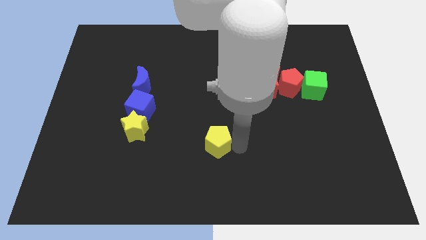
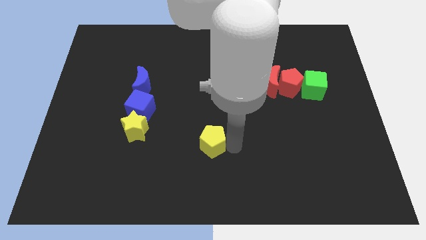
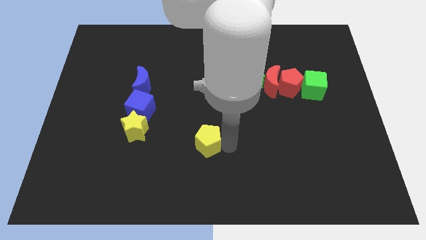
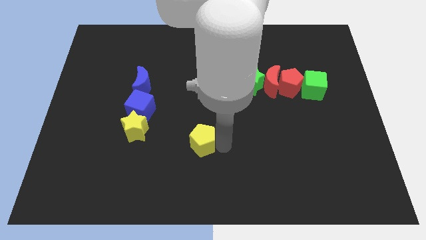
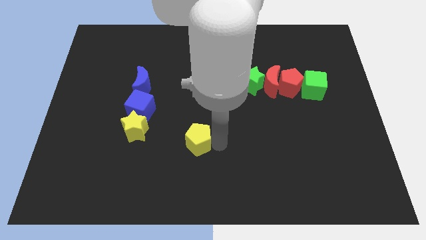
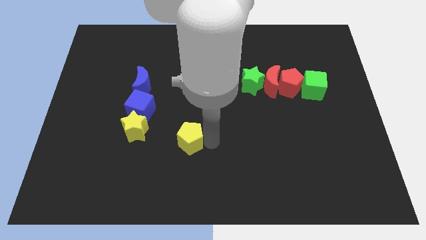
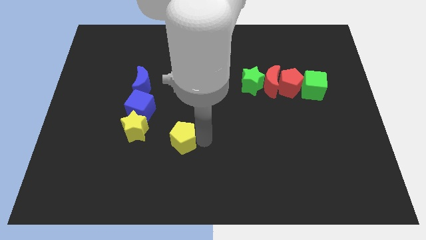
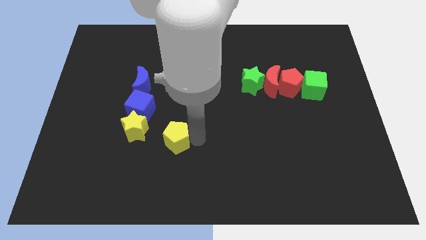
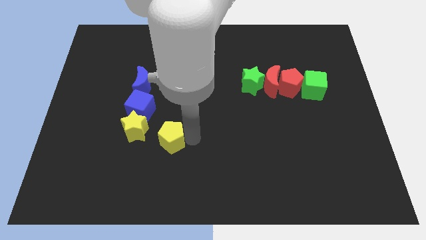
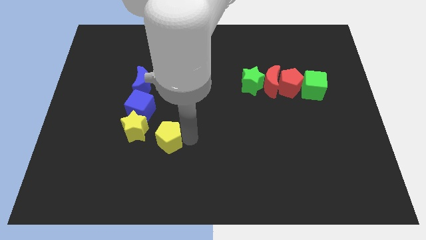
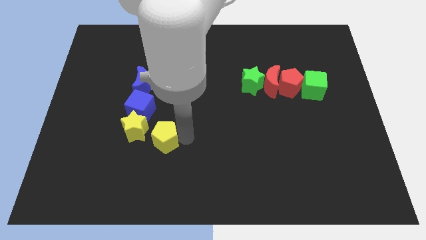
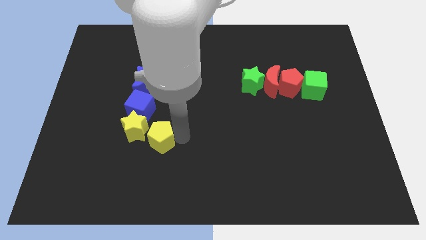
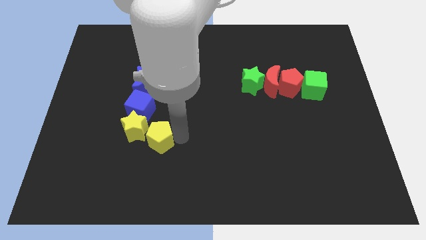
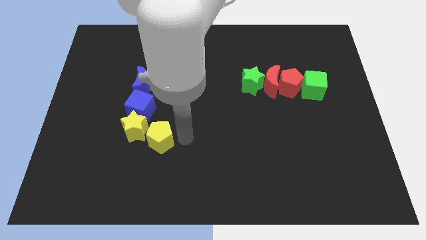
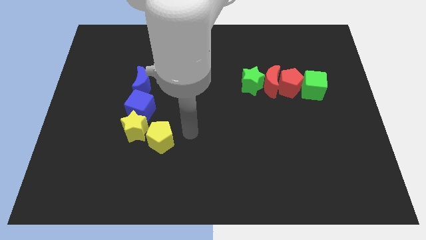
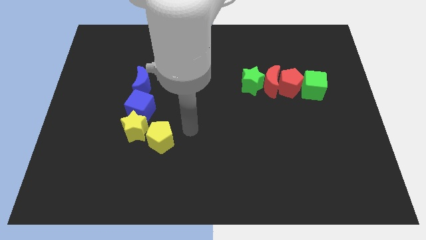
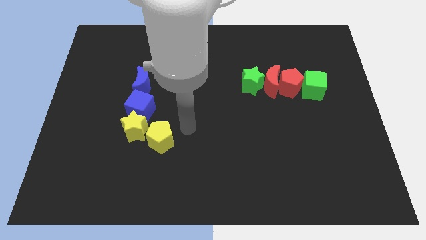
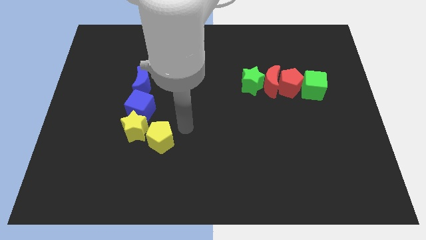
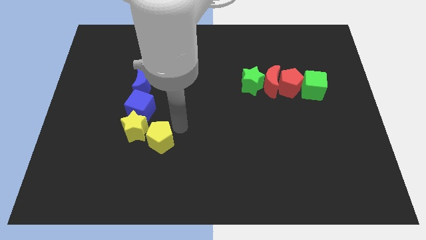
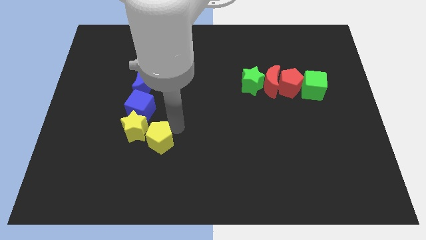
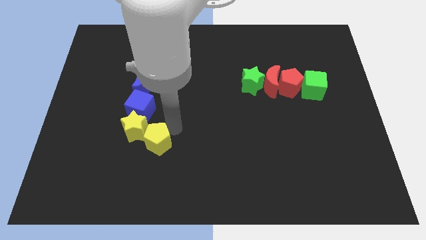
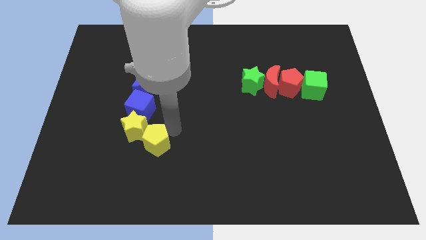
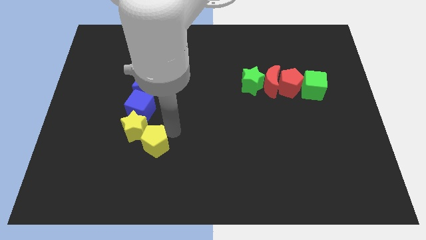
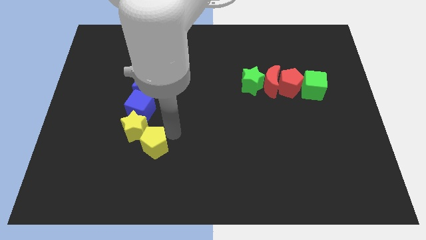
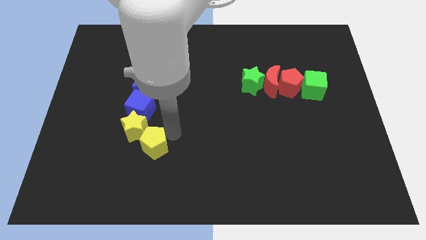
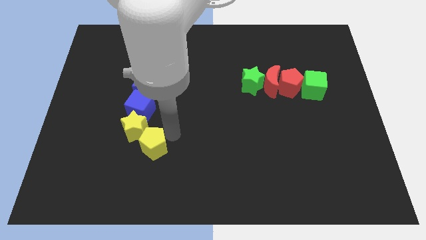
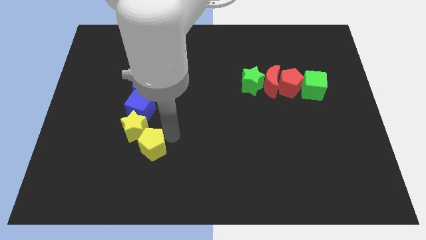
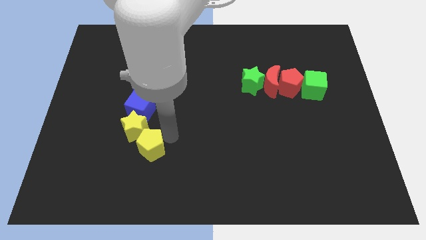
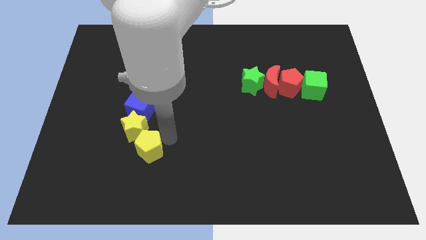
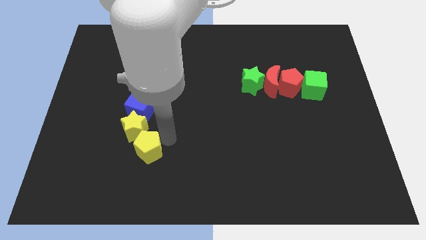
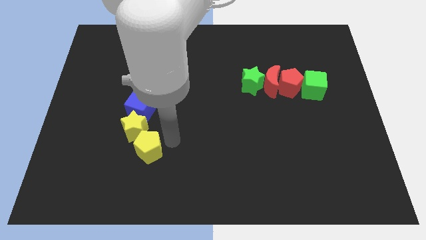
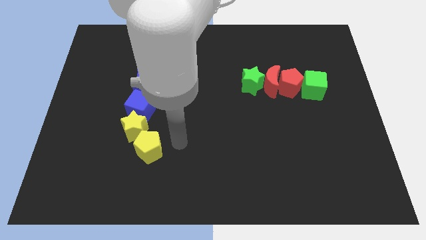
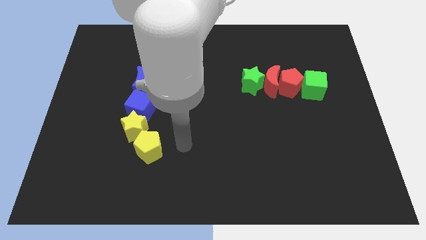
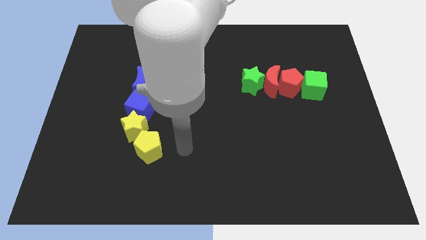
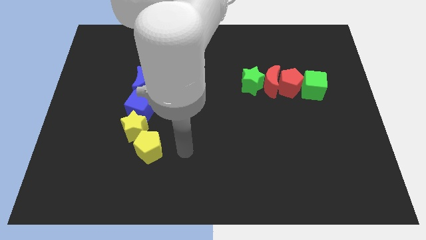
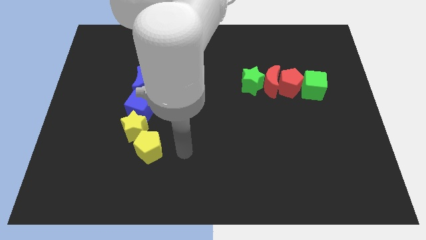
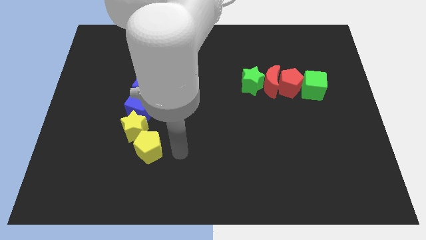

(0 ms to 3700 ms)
move yellow pentagon to the bottom right of yellow star

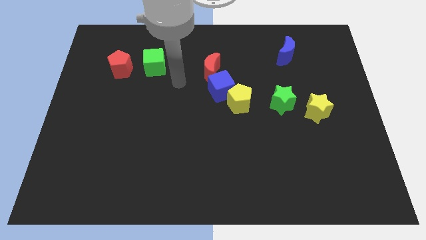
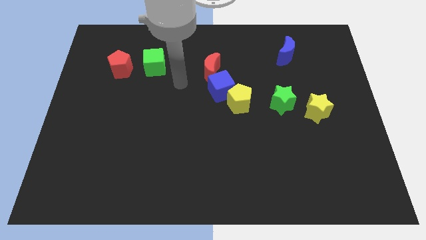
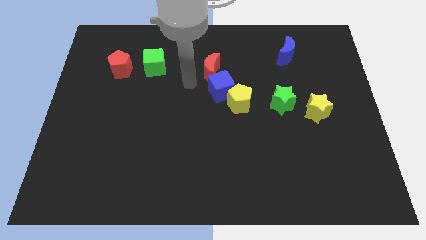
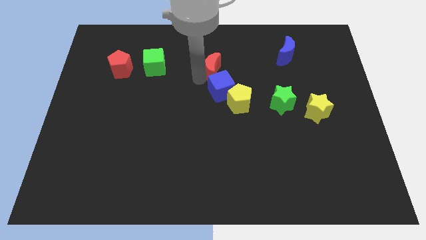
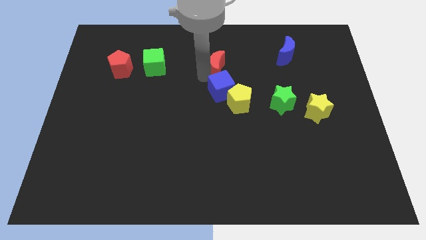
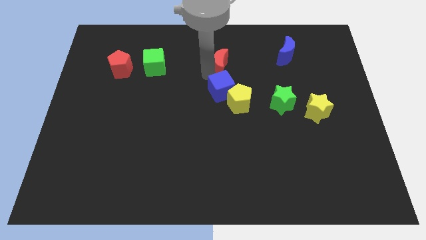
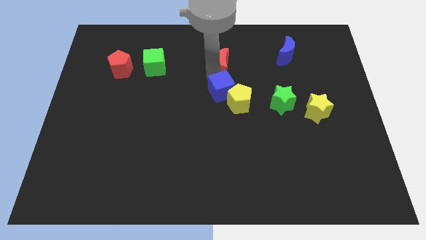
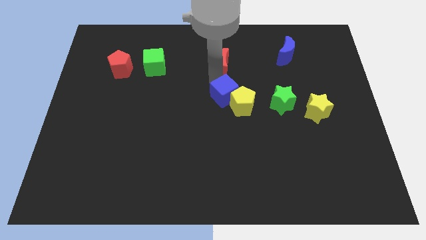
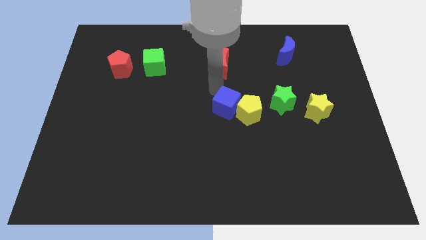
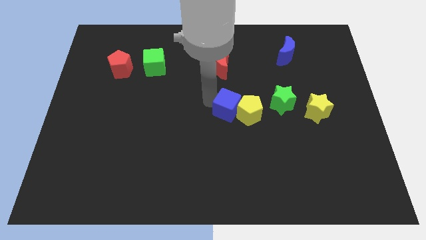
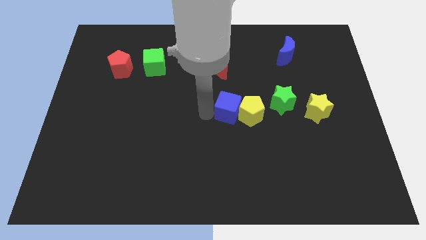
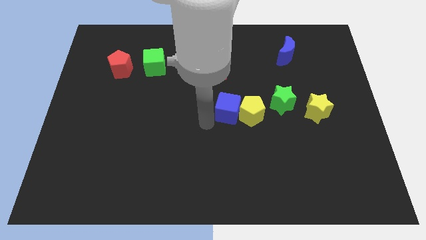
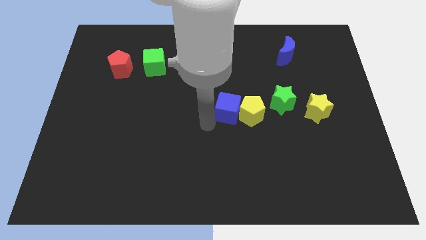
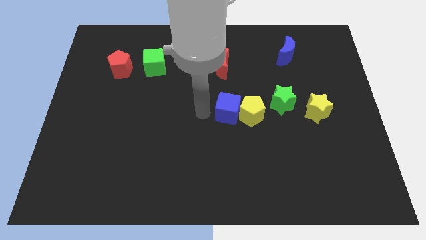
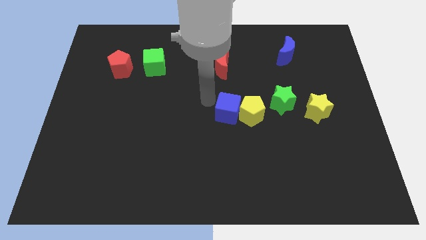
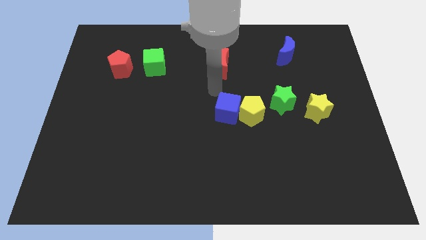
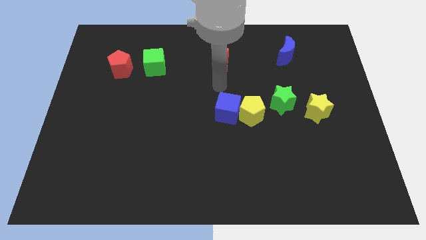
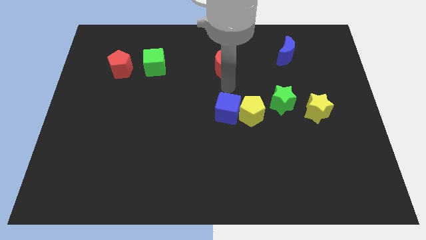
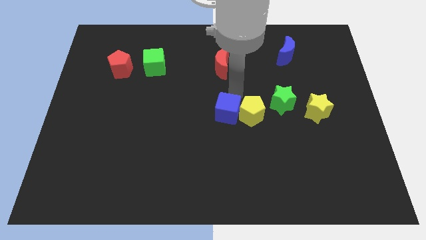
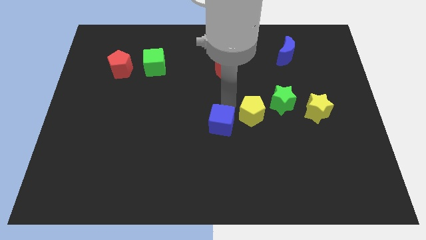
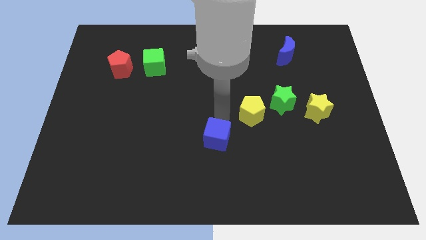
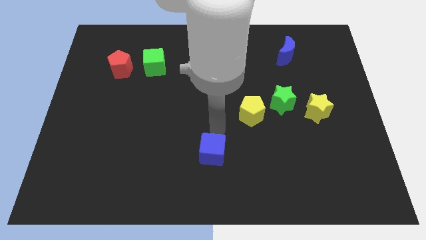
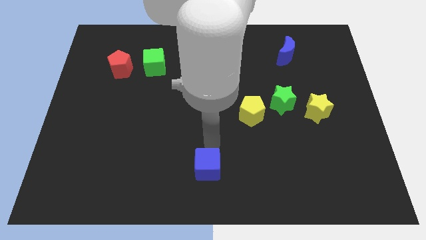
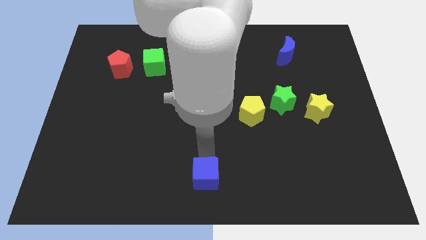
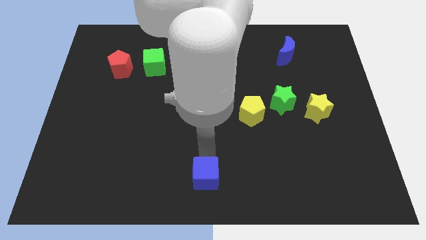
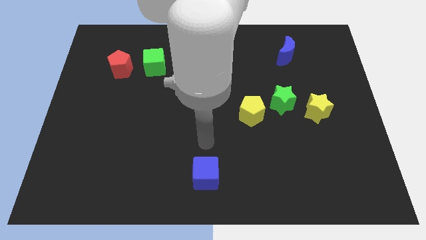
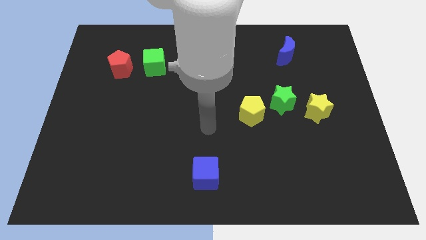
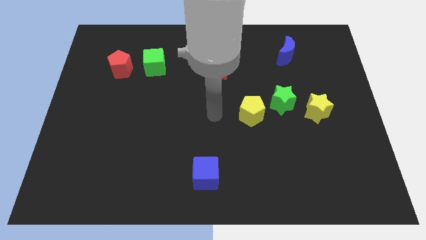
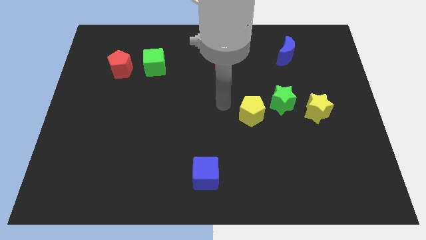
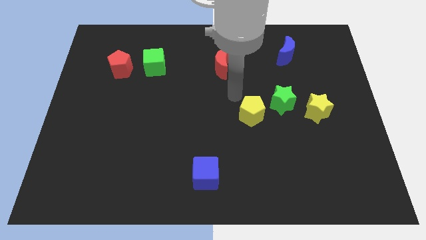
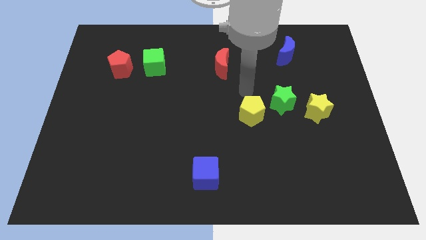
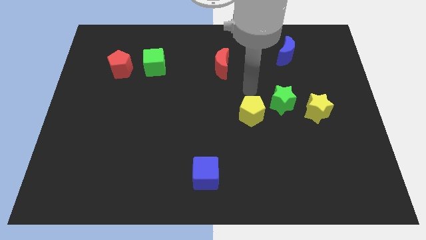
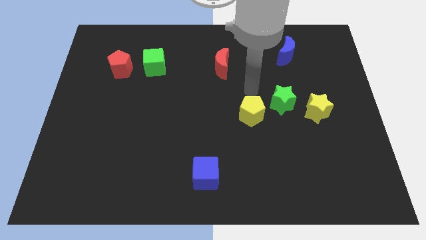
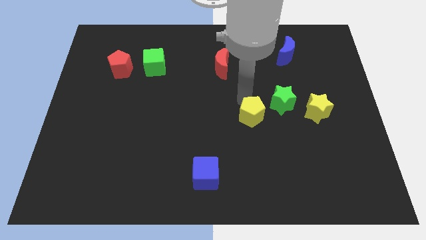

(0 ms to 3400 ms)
push the blue cube away from the yellow pentagon

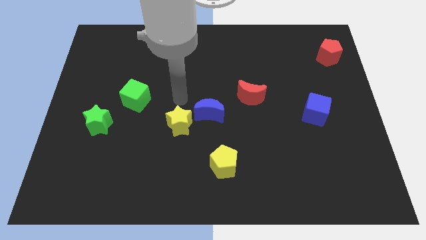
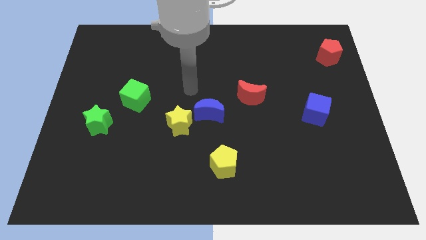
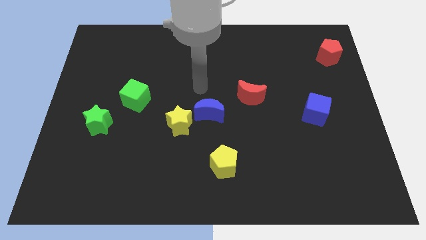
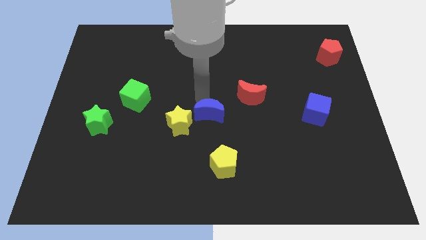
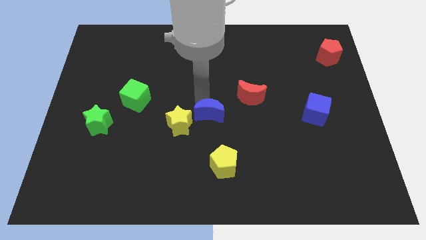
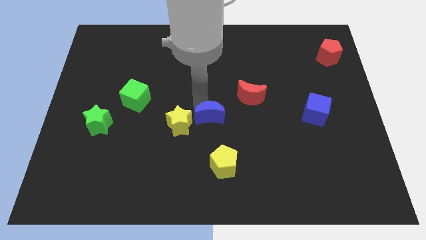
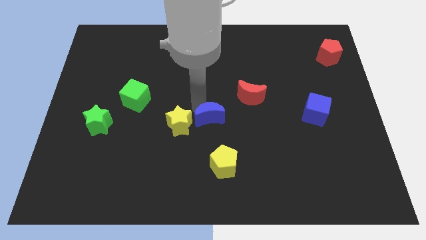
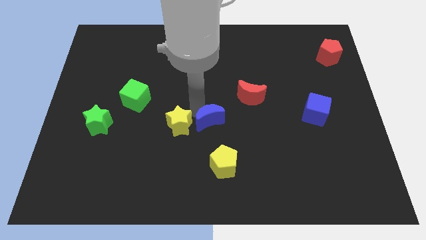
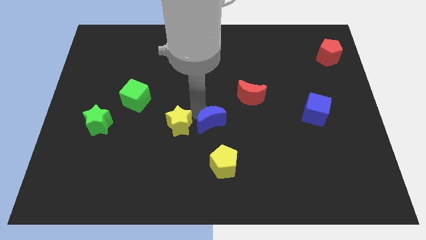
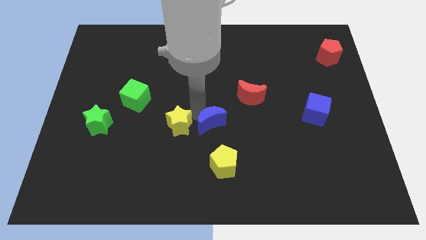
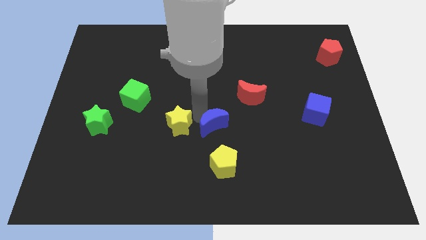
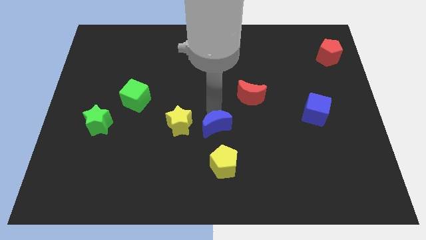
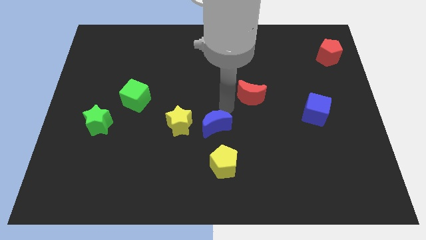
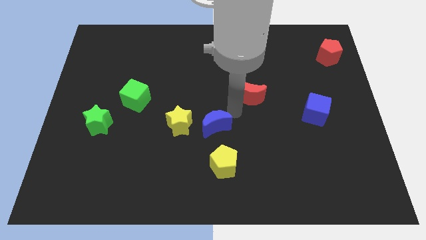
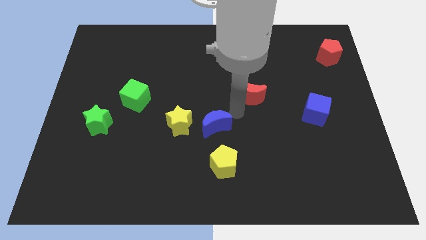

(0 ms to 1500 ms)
move the blue crescent to the right of yellow star

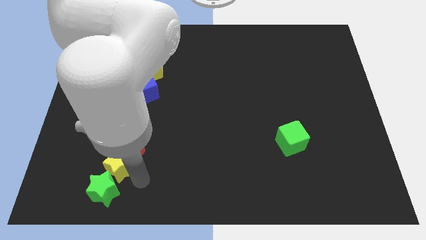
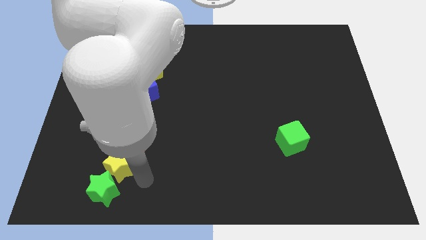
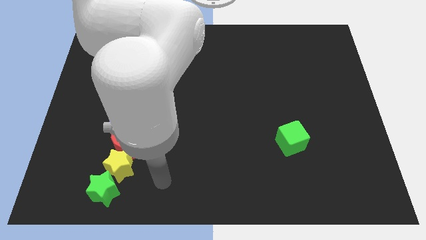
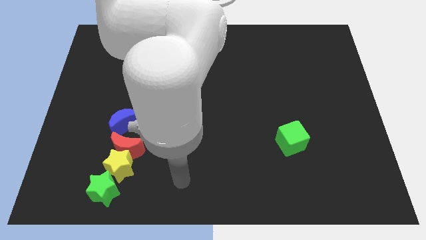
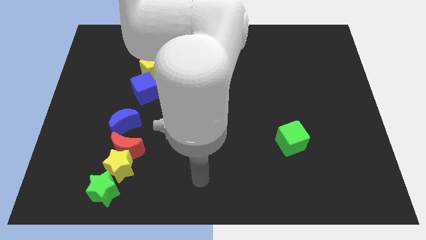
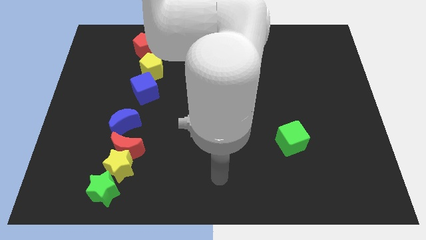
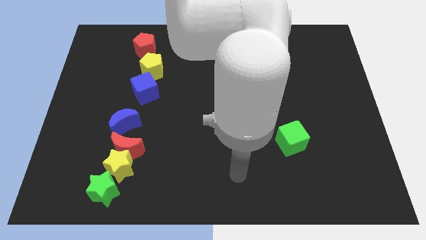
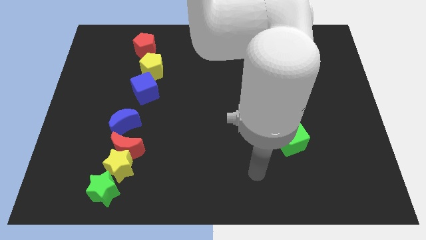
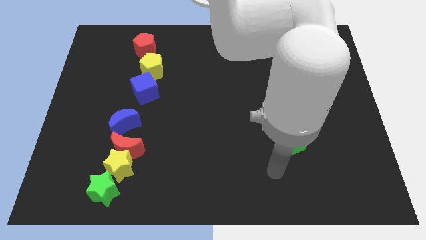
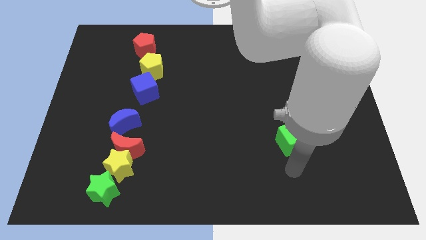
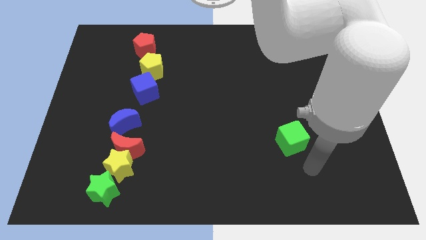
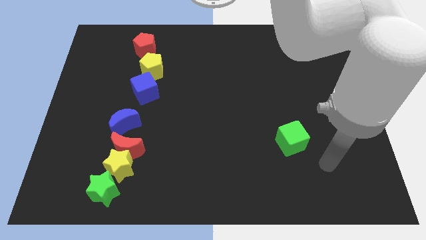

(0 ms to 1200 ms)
move your arm towards the green cube
